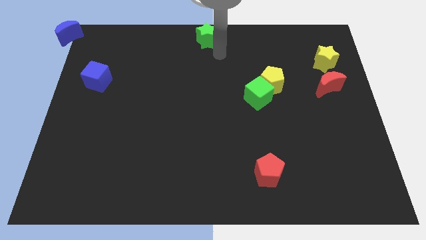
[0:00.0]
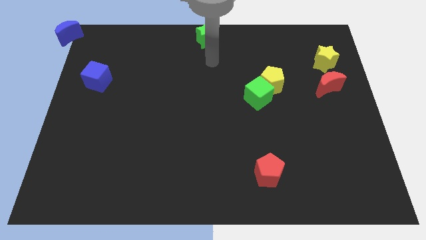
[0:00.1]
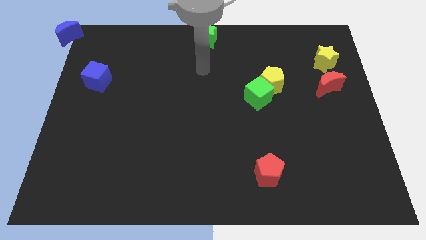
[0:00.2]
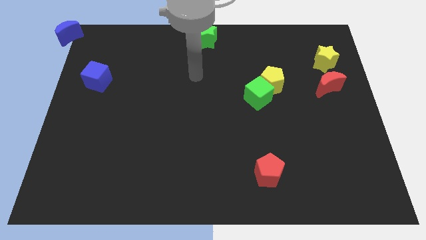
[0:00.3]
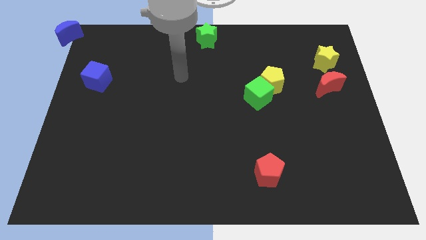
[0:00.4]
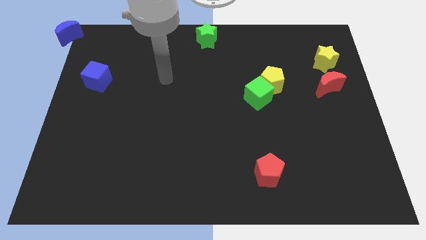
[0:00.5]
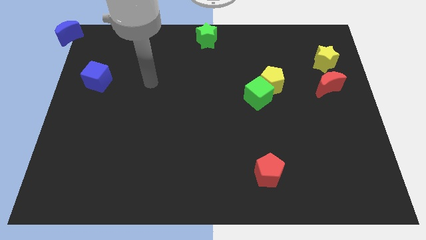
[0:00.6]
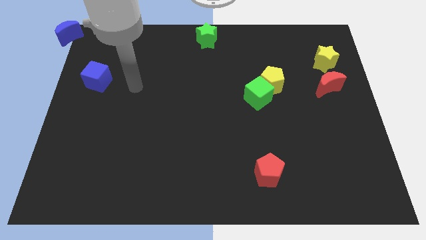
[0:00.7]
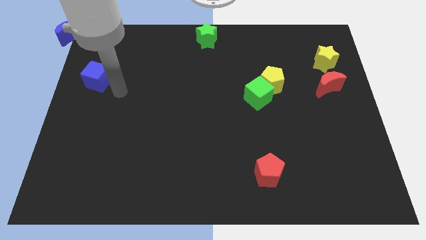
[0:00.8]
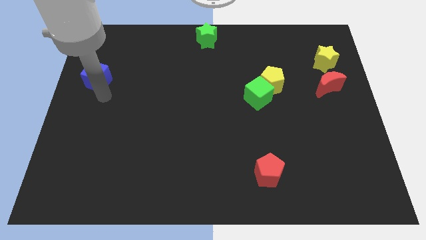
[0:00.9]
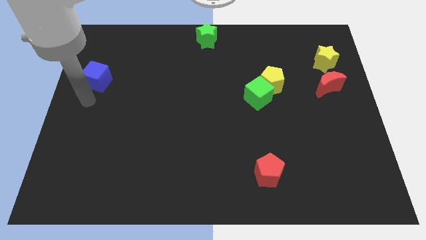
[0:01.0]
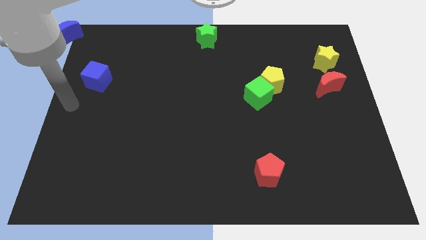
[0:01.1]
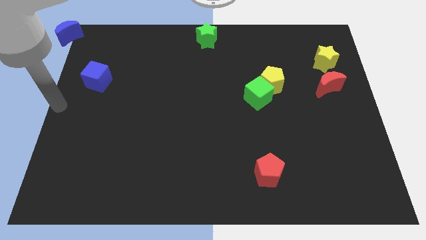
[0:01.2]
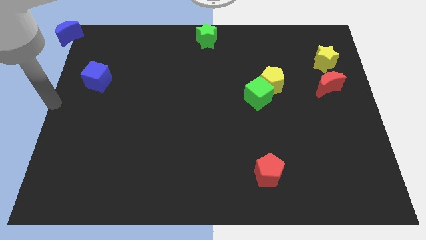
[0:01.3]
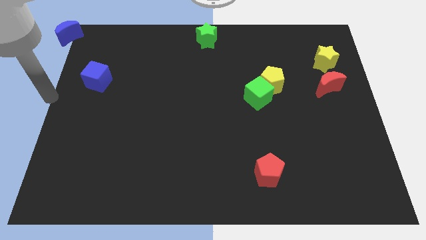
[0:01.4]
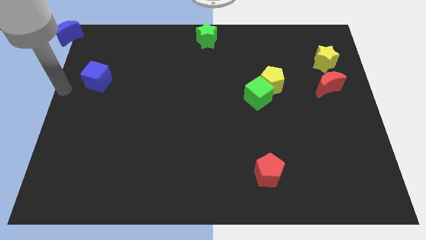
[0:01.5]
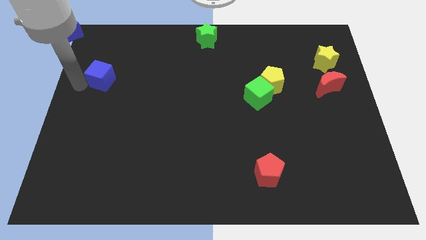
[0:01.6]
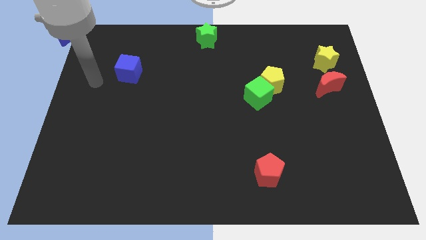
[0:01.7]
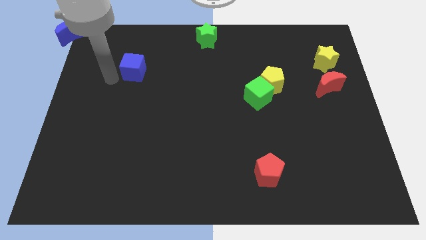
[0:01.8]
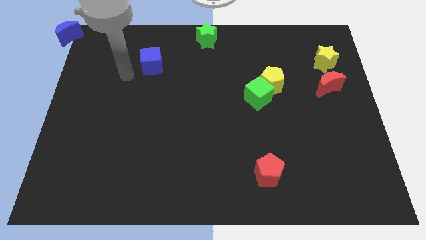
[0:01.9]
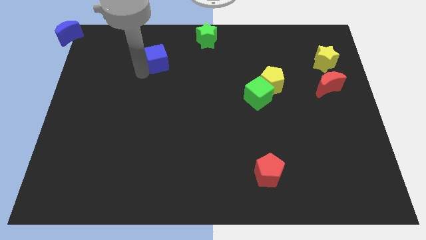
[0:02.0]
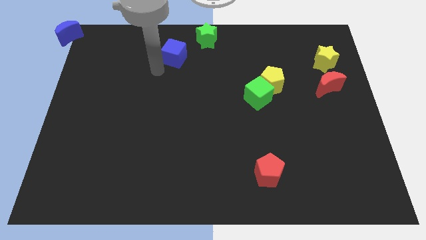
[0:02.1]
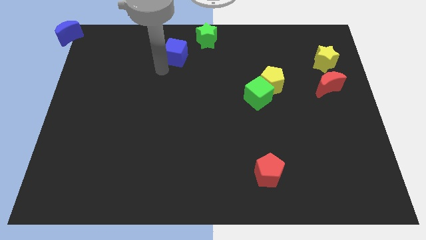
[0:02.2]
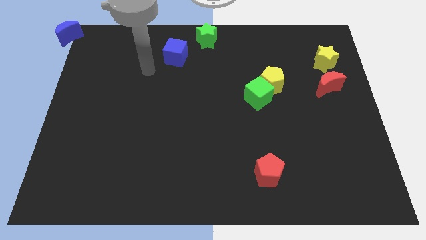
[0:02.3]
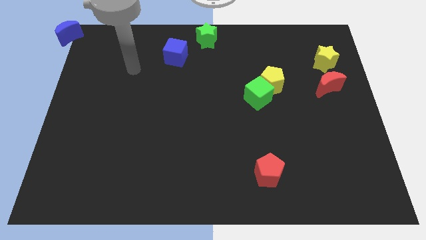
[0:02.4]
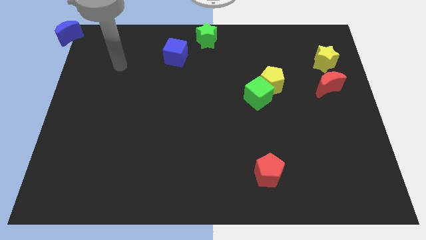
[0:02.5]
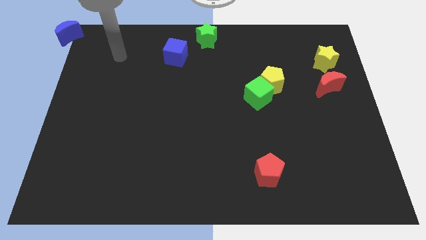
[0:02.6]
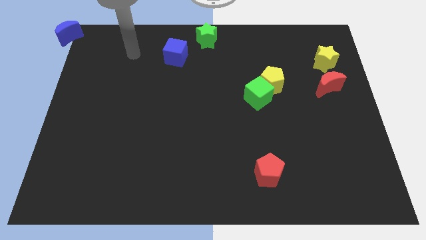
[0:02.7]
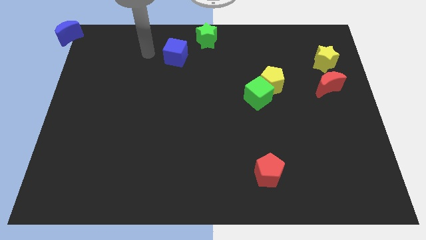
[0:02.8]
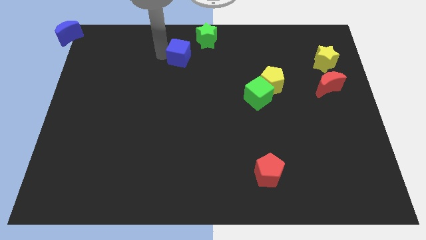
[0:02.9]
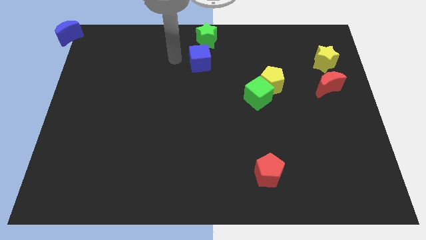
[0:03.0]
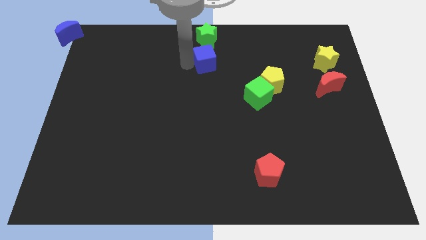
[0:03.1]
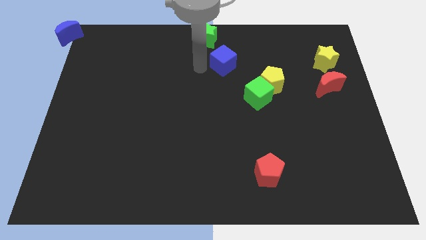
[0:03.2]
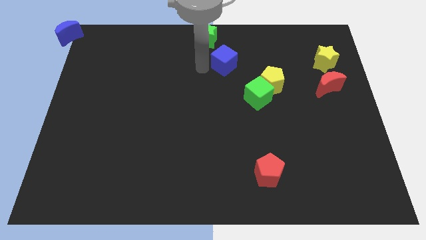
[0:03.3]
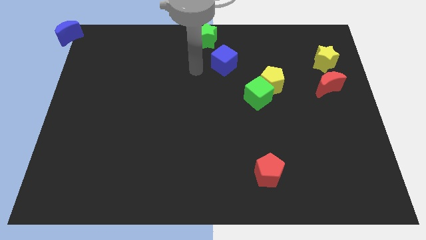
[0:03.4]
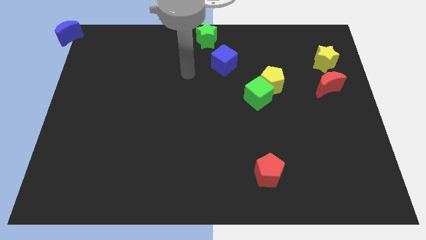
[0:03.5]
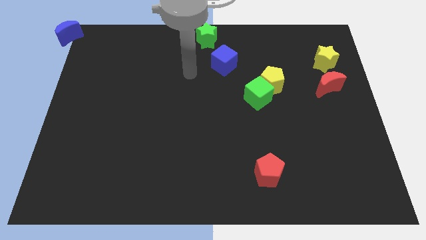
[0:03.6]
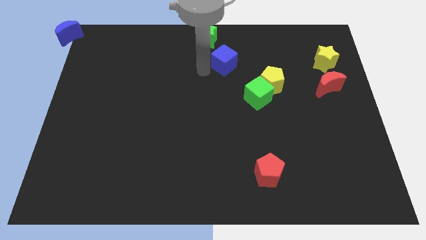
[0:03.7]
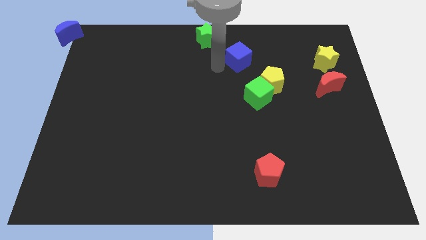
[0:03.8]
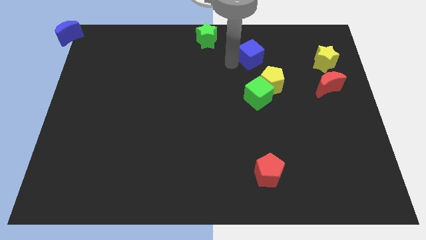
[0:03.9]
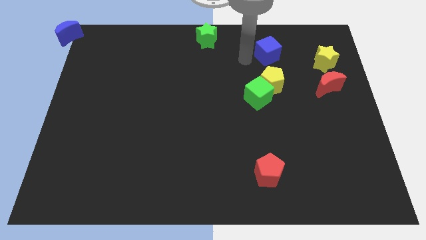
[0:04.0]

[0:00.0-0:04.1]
push the blue cube to the top of the yellow pentagon

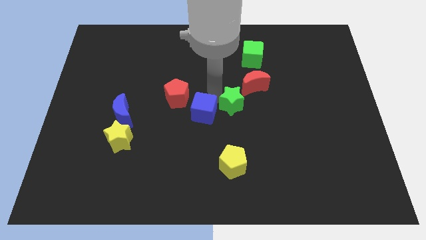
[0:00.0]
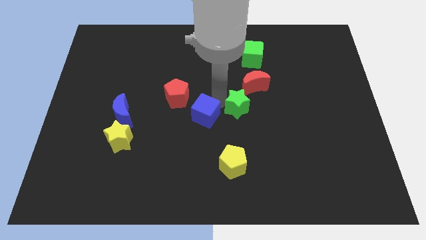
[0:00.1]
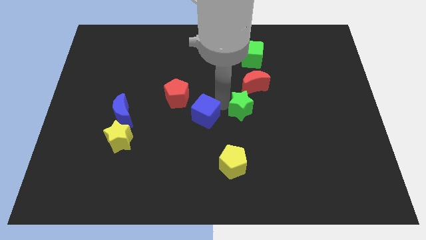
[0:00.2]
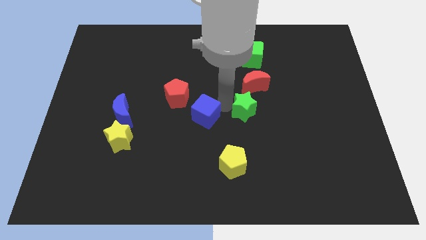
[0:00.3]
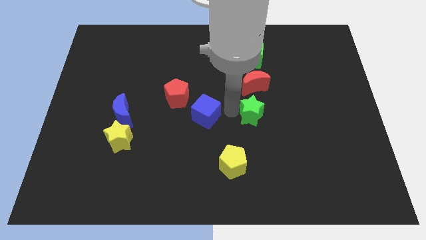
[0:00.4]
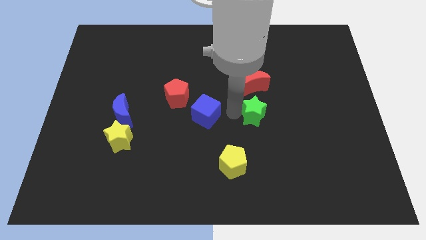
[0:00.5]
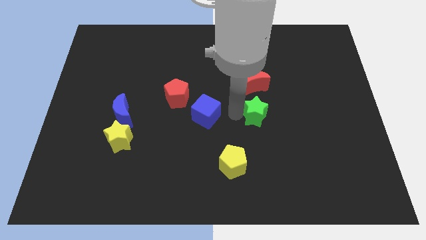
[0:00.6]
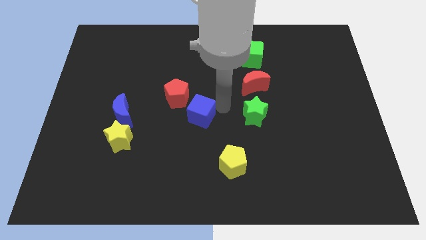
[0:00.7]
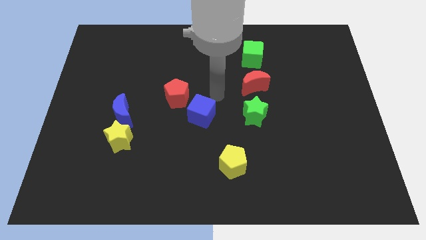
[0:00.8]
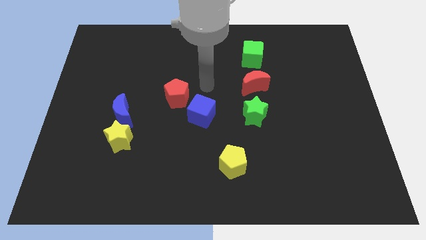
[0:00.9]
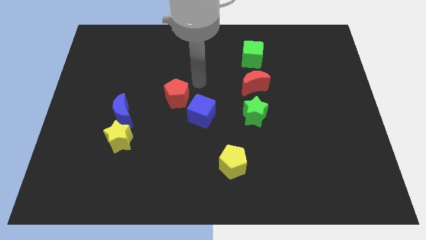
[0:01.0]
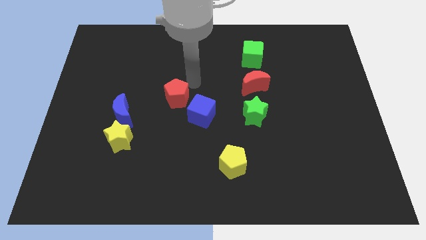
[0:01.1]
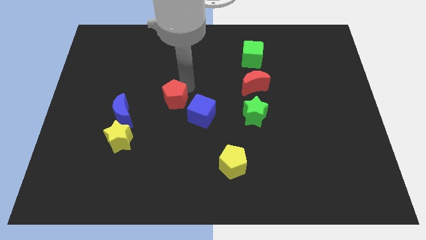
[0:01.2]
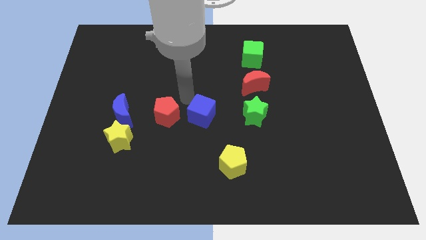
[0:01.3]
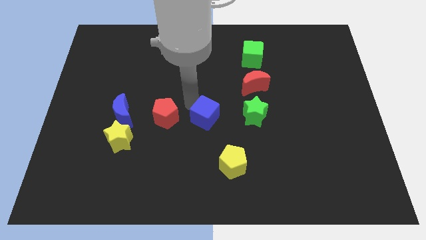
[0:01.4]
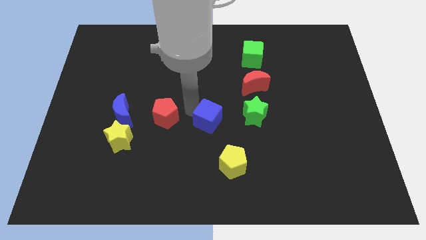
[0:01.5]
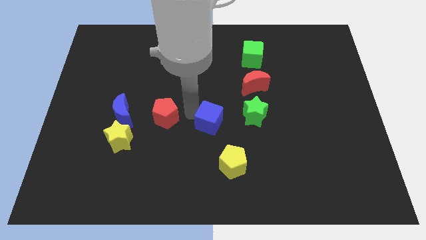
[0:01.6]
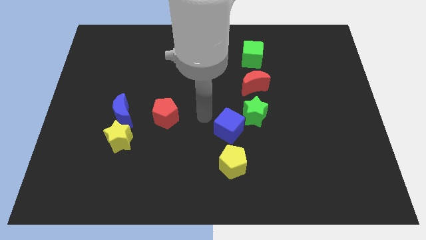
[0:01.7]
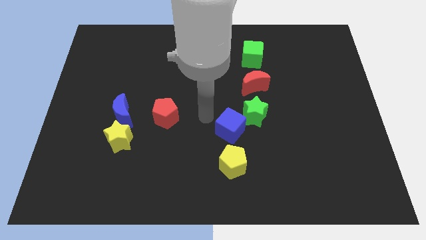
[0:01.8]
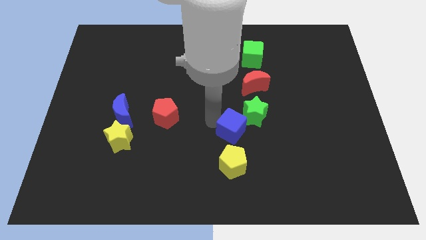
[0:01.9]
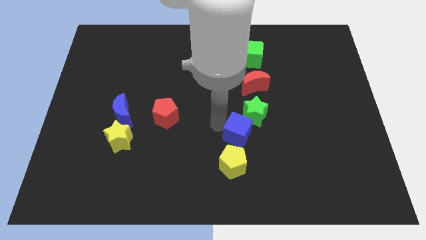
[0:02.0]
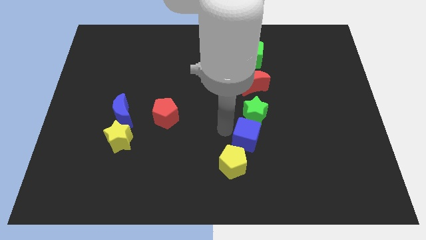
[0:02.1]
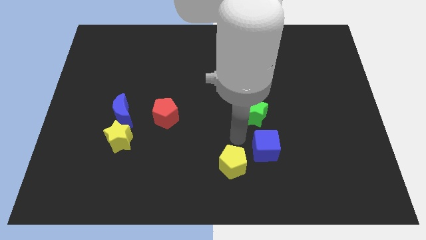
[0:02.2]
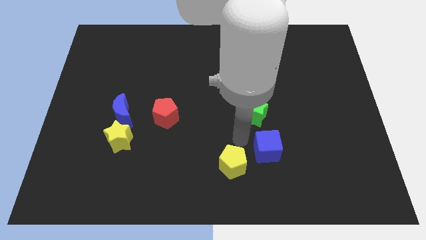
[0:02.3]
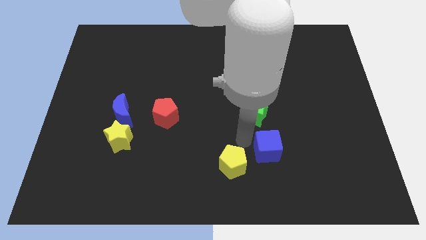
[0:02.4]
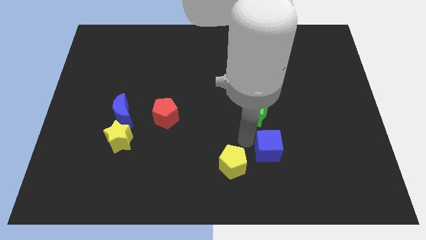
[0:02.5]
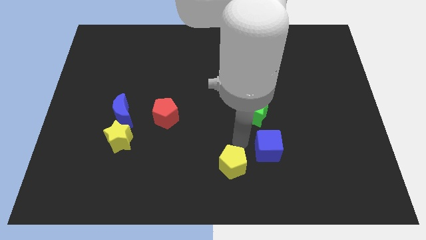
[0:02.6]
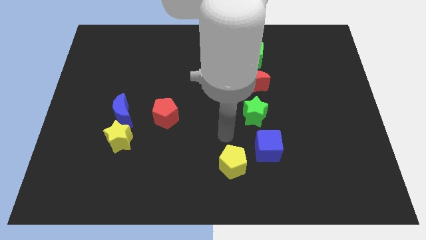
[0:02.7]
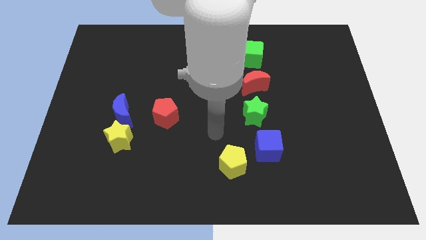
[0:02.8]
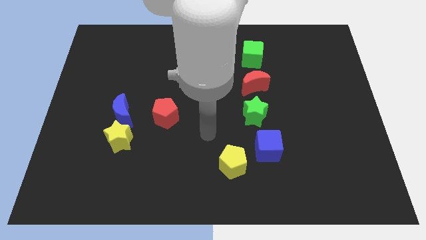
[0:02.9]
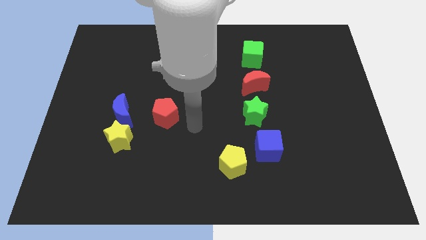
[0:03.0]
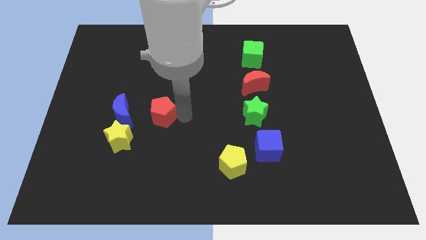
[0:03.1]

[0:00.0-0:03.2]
push the blue cube to the bottom of the green star

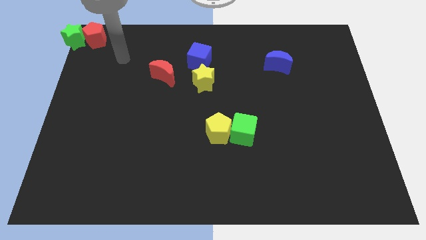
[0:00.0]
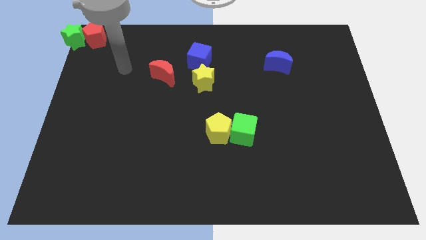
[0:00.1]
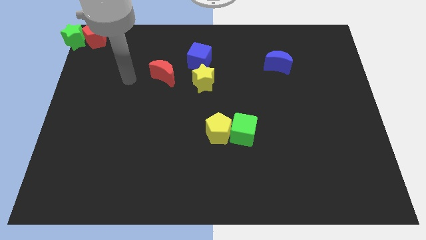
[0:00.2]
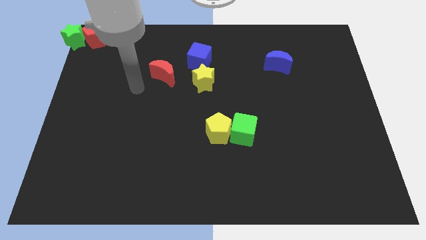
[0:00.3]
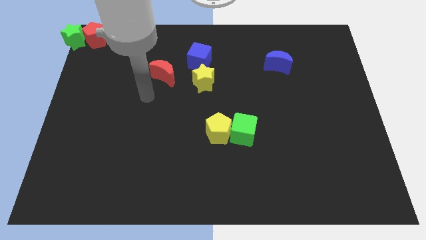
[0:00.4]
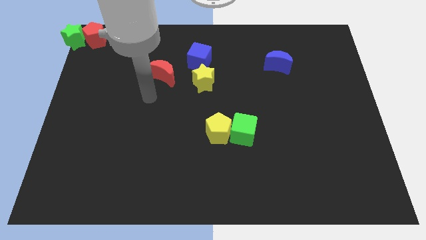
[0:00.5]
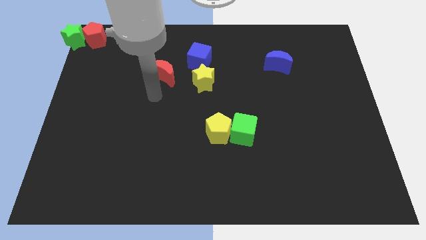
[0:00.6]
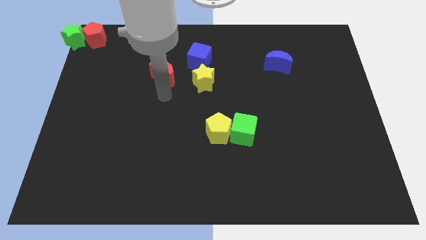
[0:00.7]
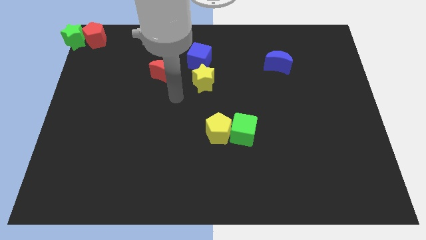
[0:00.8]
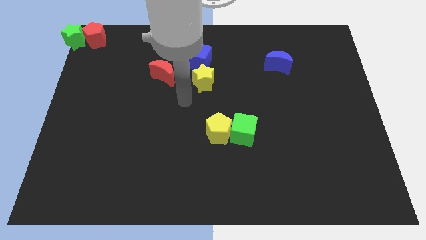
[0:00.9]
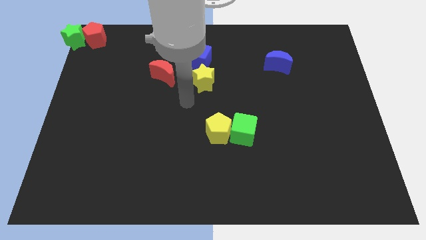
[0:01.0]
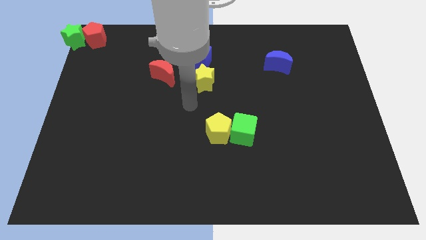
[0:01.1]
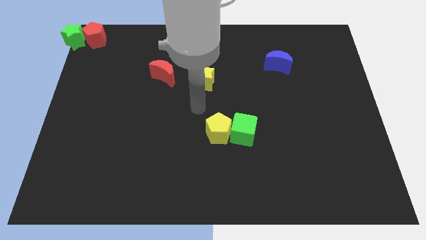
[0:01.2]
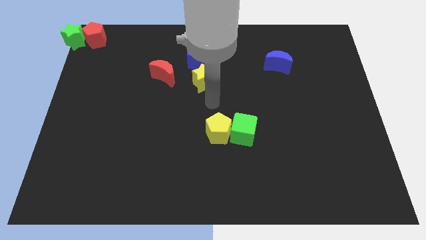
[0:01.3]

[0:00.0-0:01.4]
place your arm in between the yellow blocks

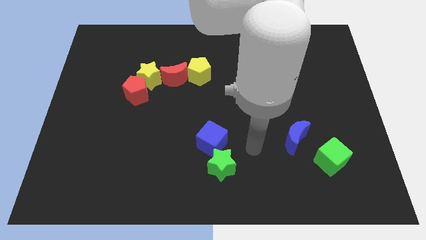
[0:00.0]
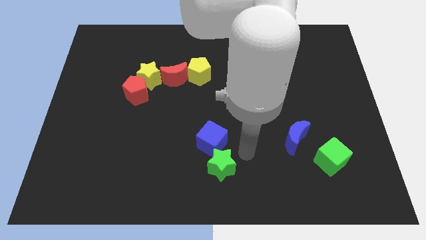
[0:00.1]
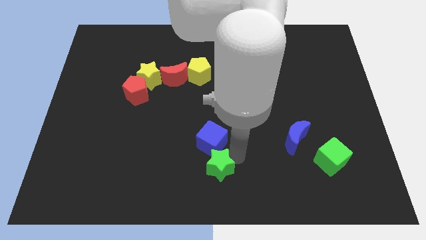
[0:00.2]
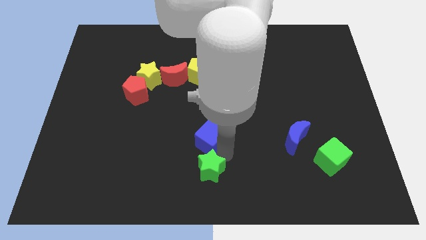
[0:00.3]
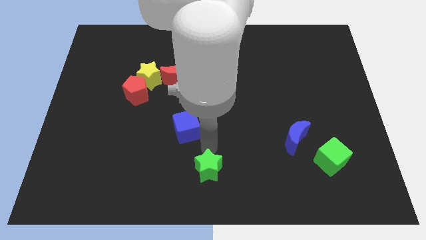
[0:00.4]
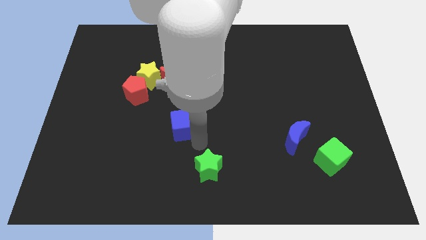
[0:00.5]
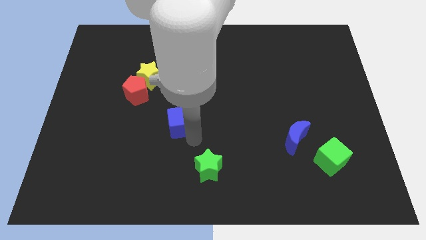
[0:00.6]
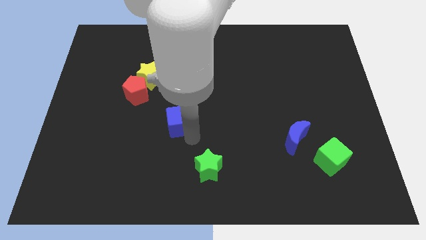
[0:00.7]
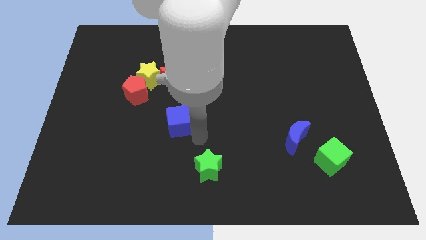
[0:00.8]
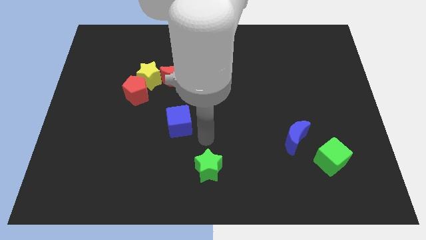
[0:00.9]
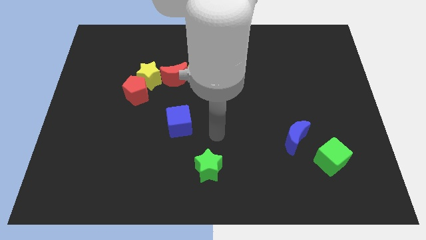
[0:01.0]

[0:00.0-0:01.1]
separate the blue cube from green cube
